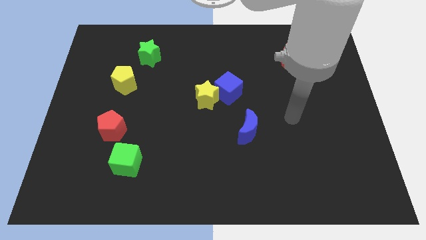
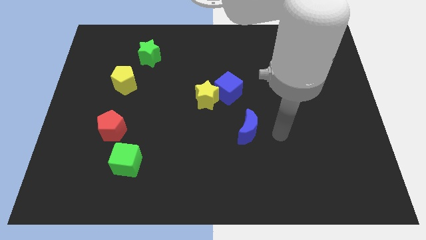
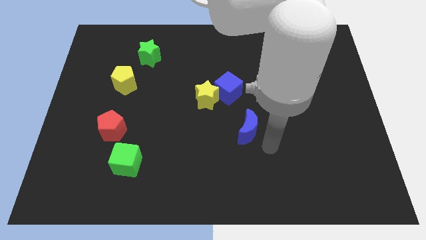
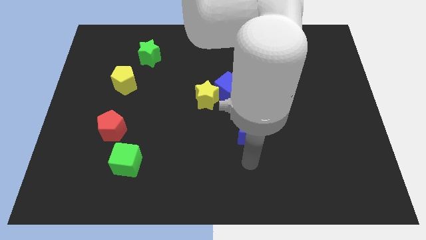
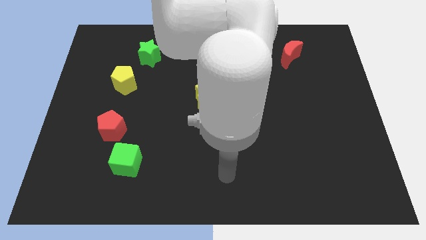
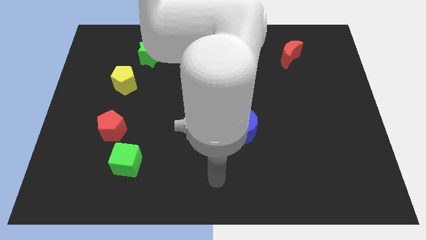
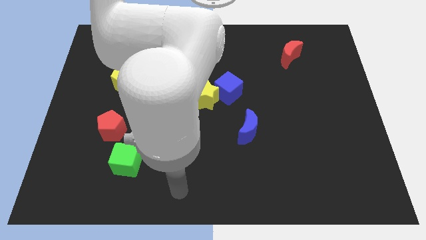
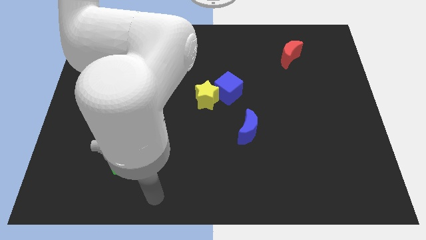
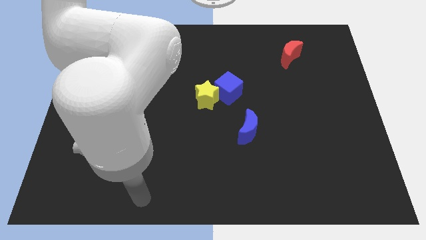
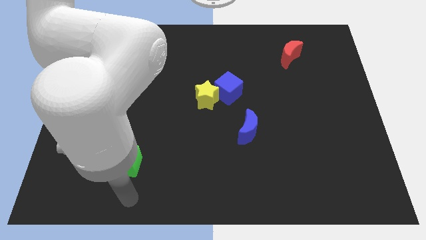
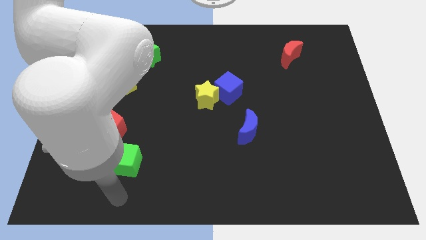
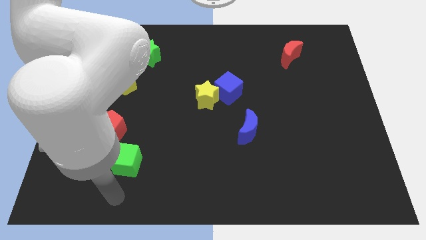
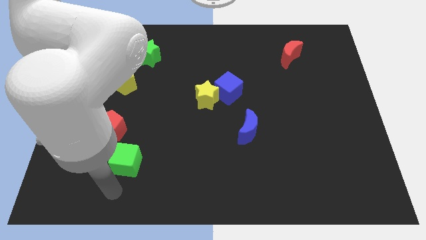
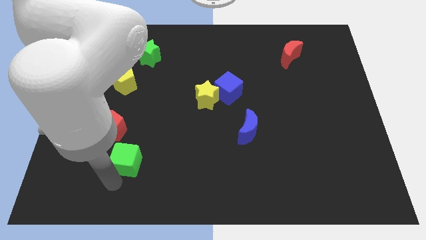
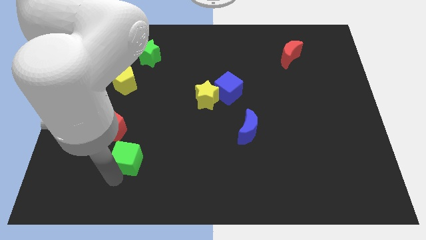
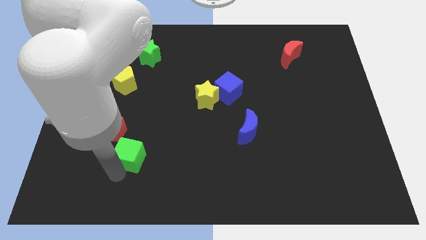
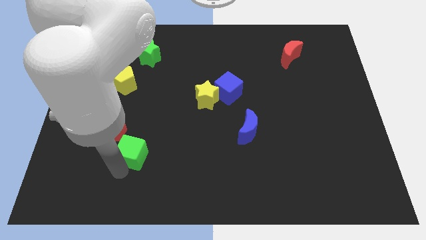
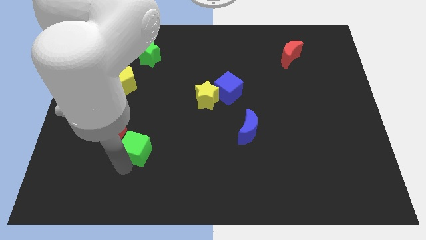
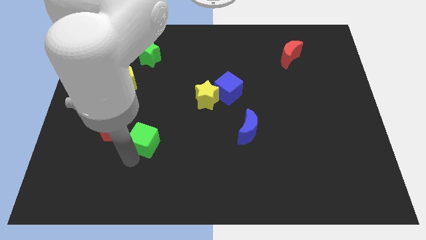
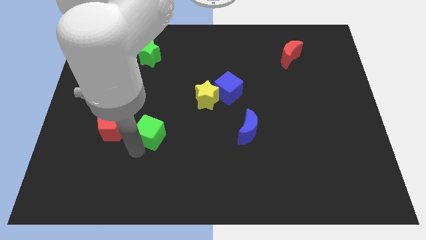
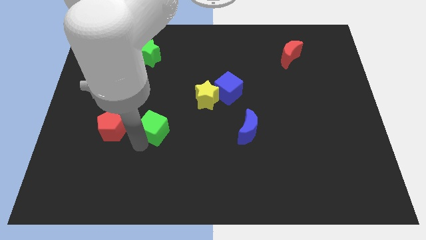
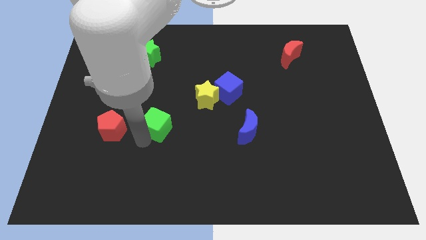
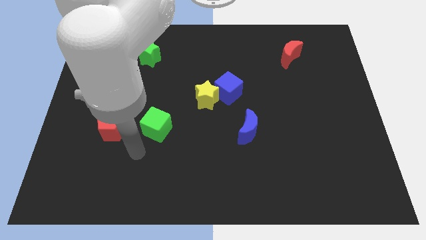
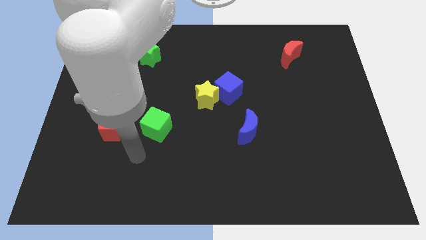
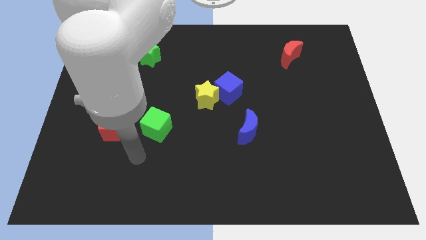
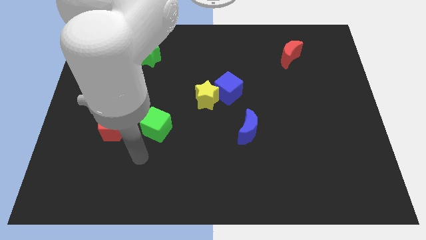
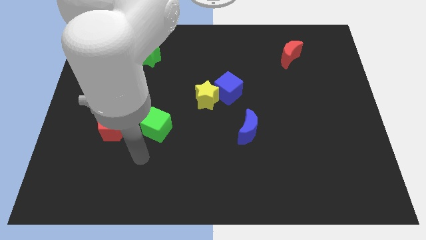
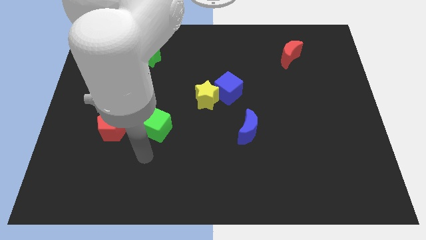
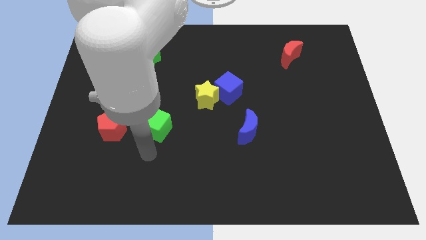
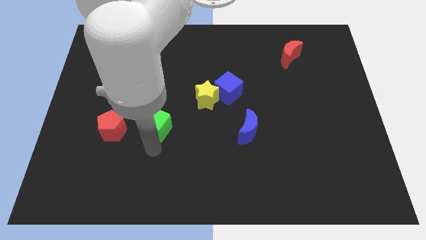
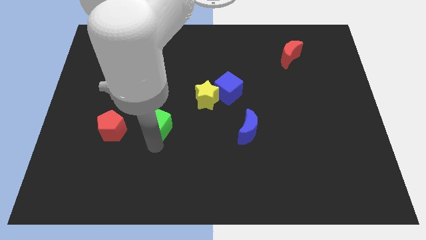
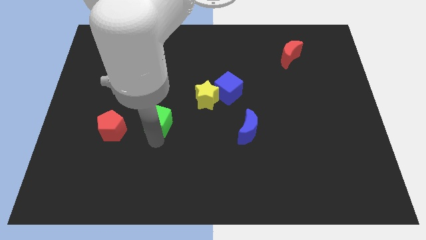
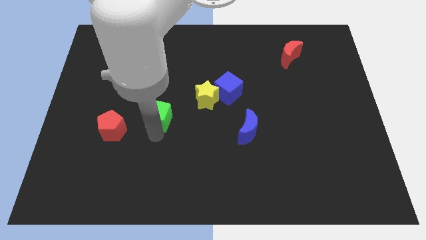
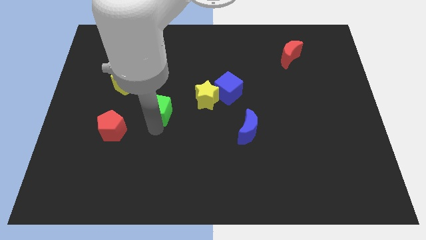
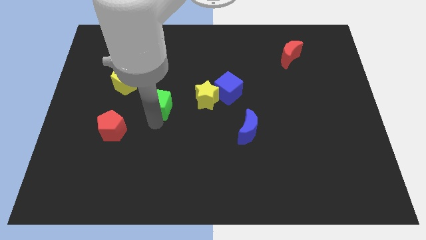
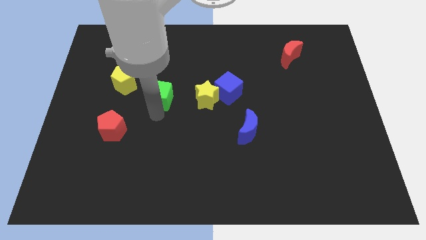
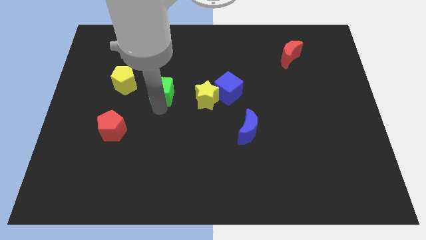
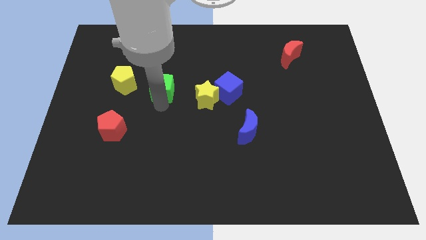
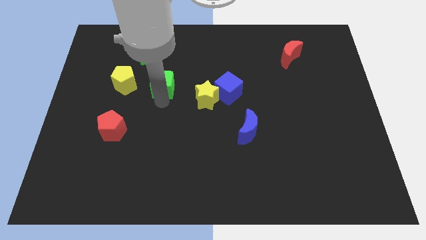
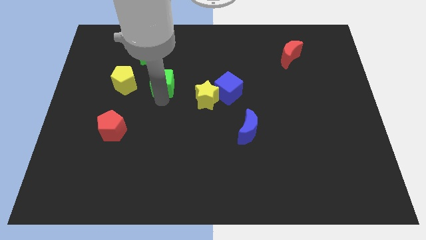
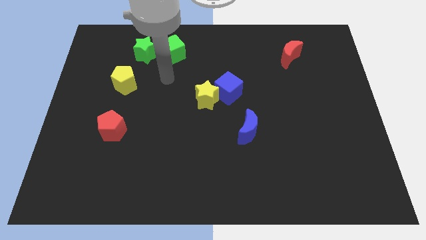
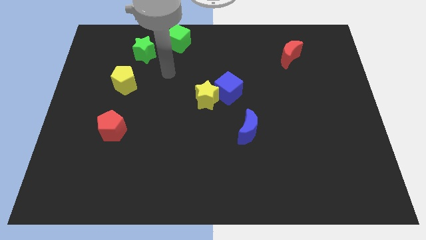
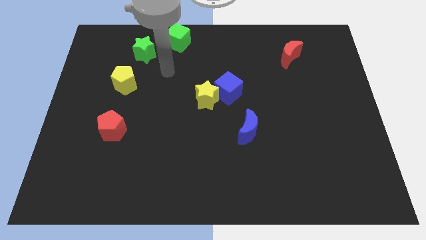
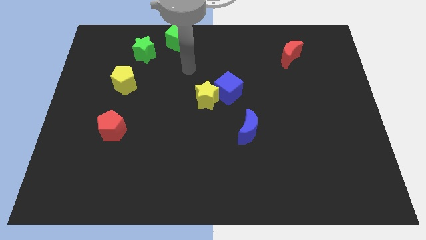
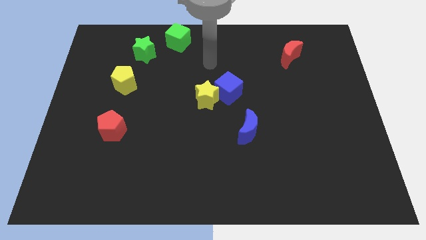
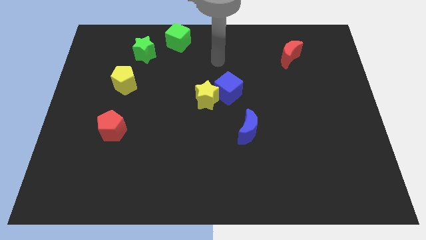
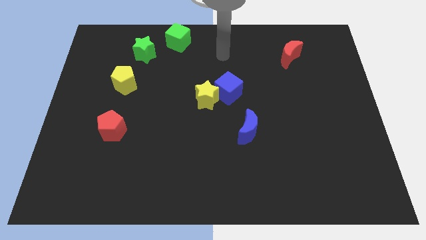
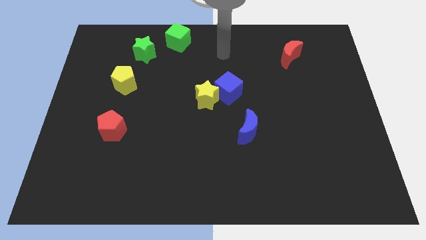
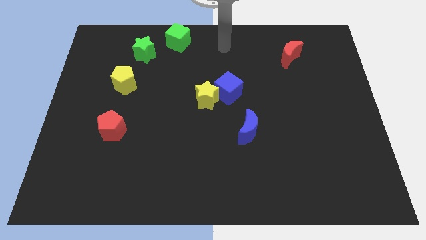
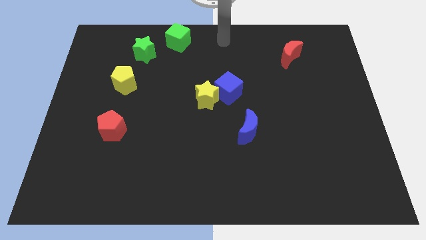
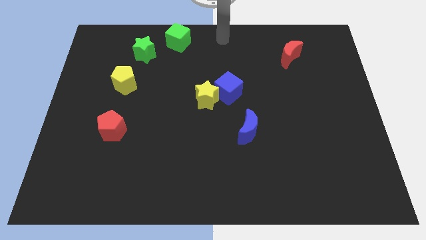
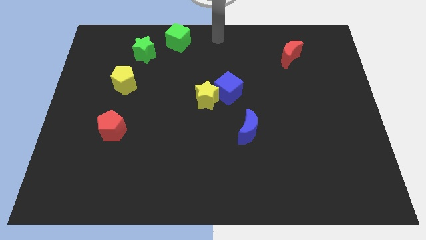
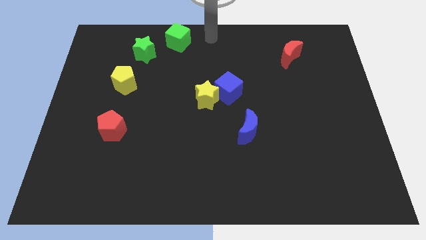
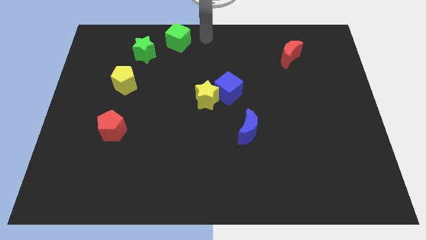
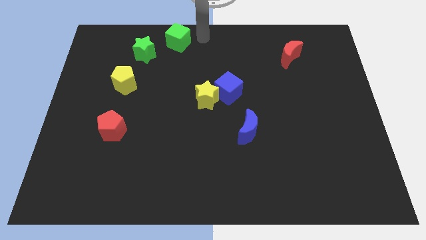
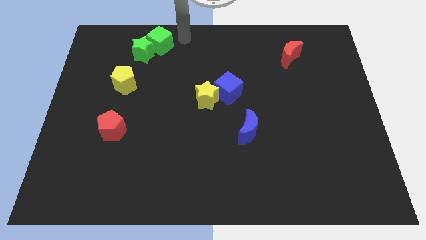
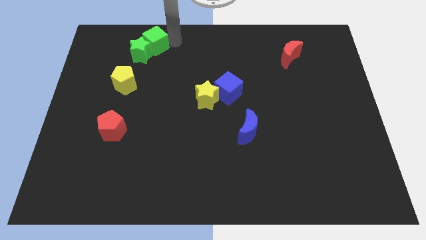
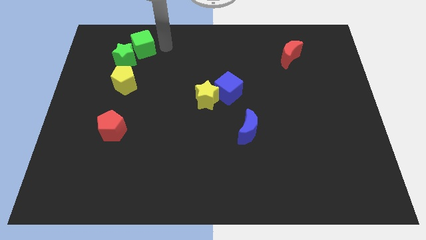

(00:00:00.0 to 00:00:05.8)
put the green cube towards the green star

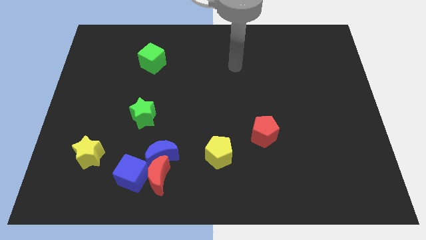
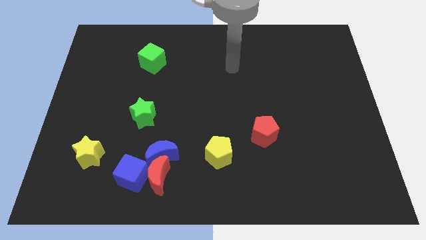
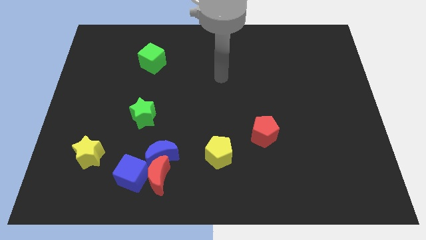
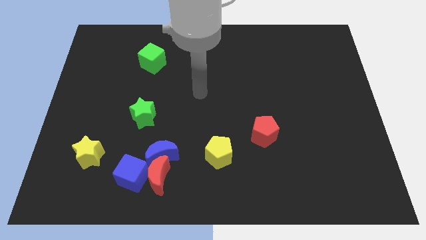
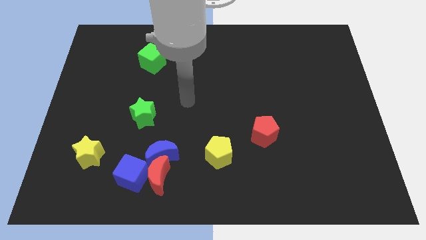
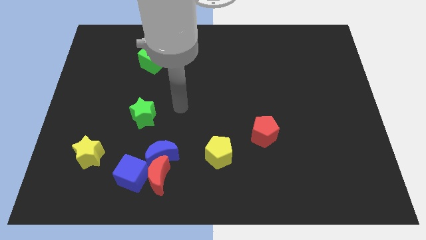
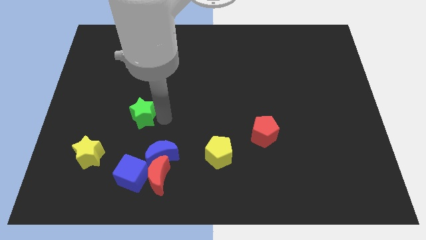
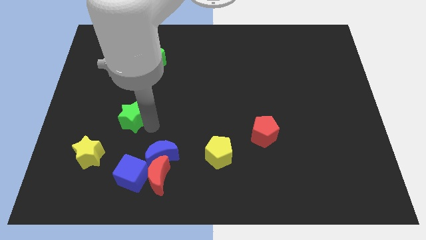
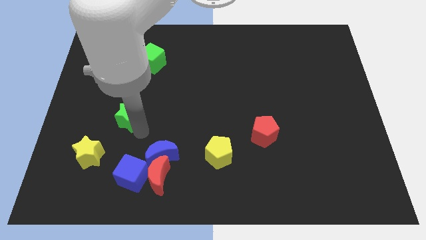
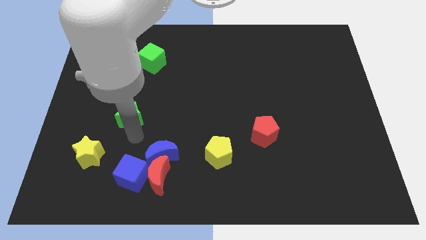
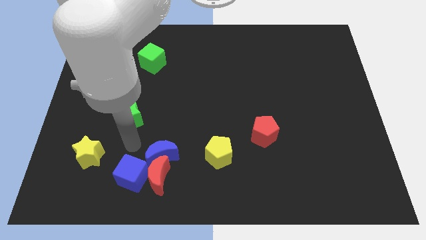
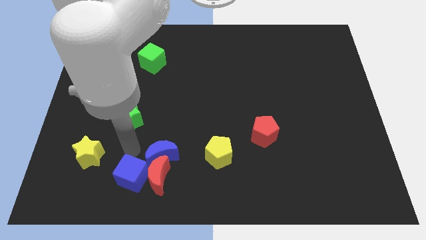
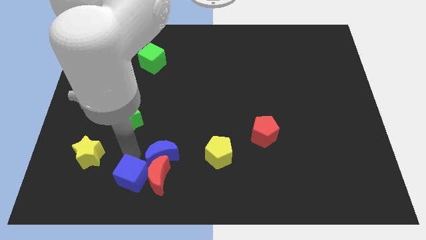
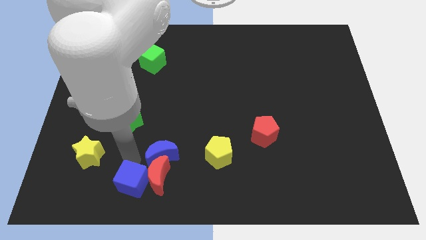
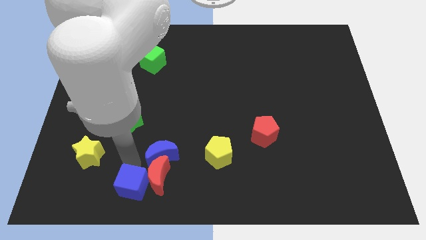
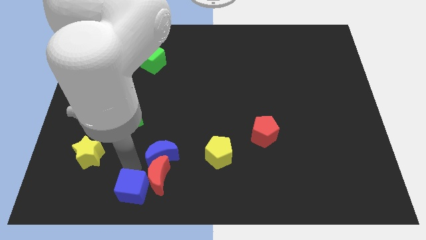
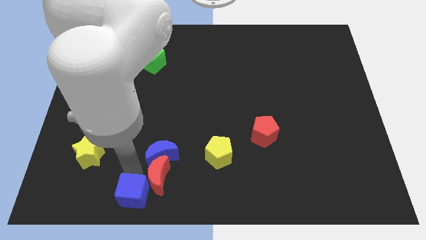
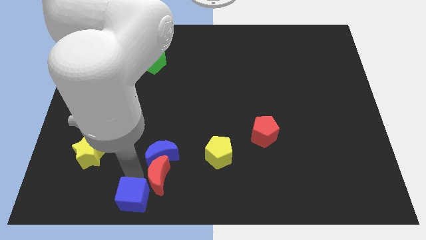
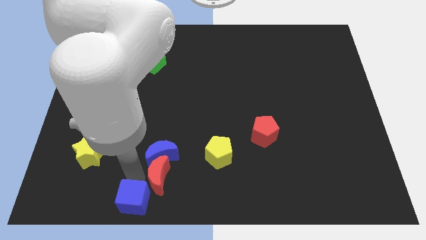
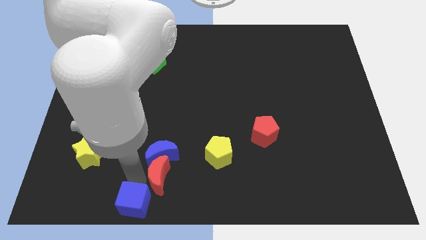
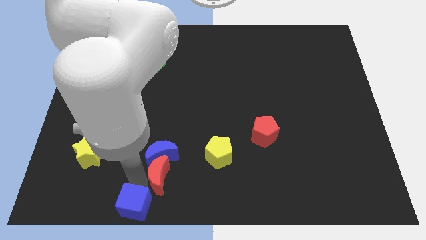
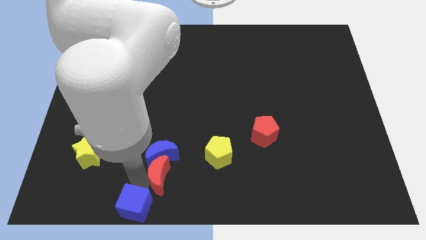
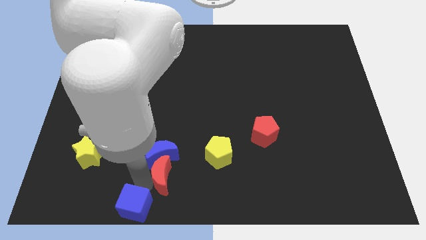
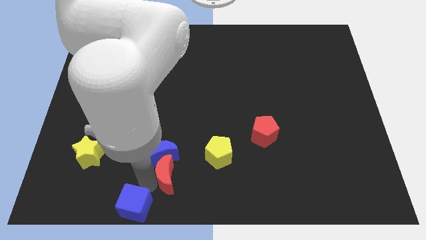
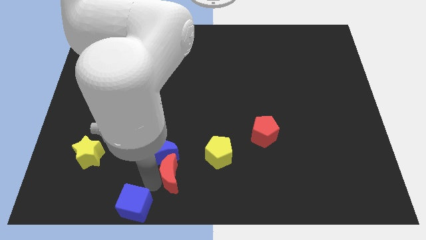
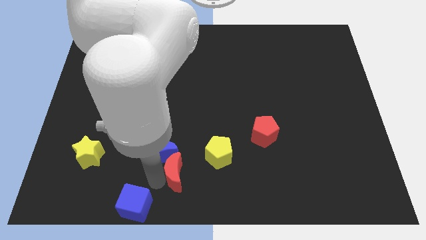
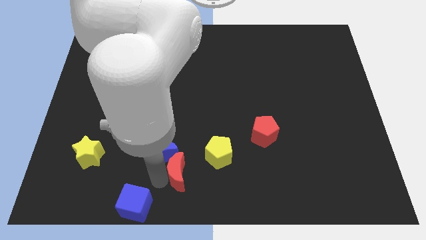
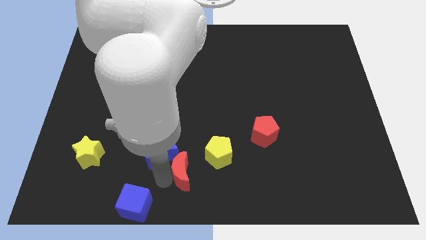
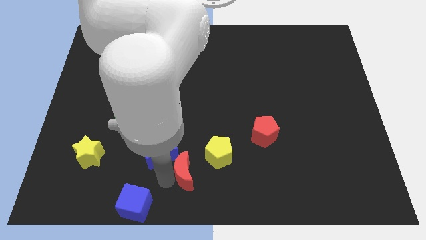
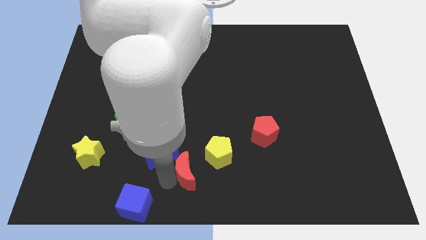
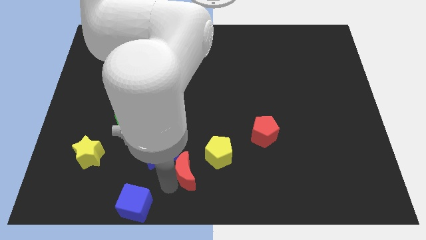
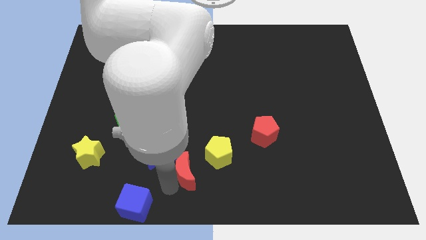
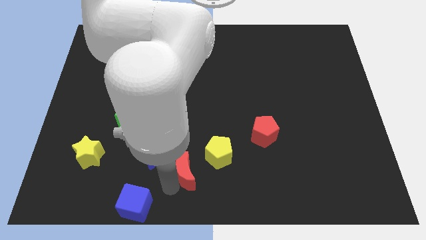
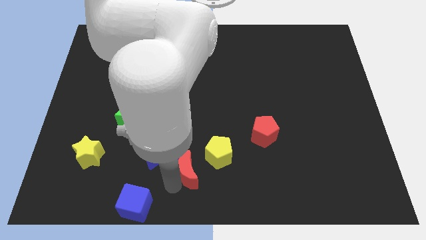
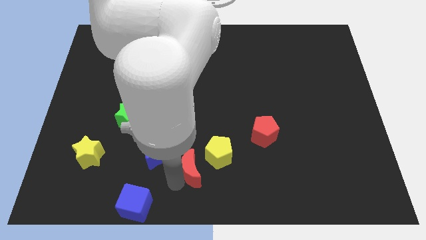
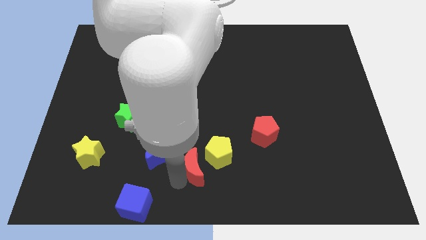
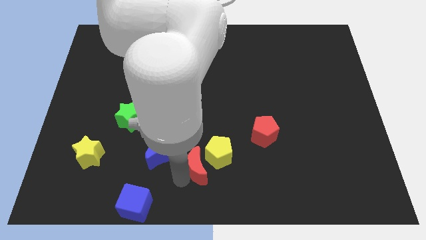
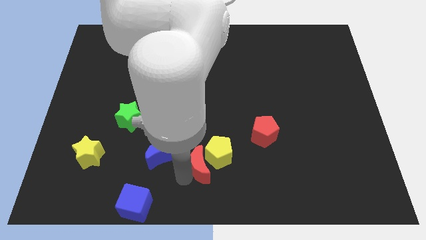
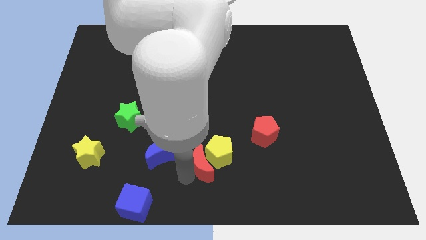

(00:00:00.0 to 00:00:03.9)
slide the red moon next to the yellow pentagon
